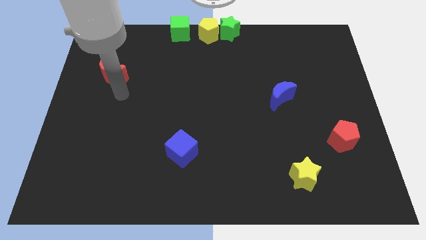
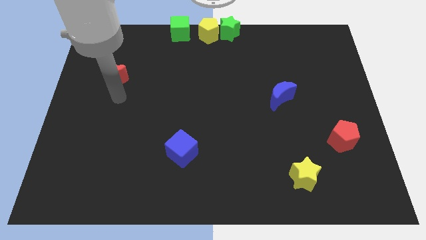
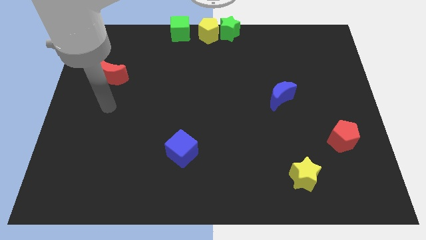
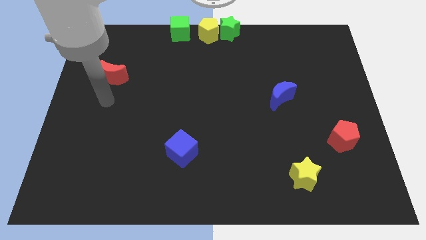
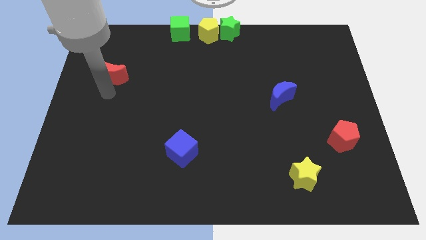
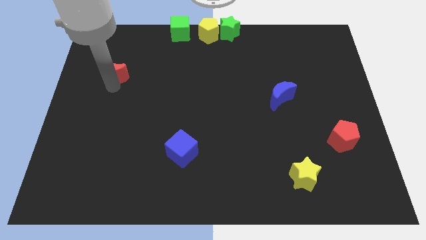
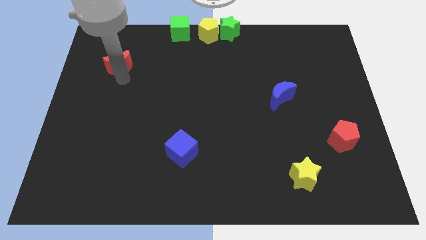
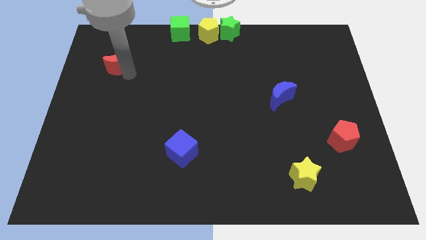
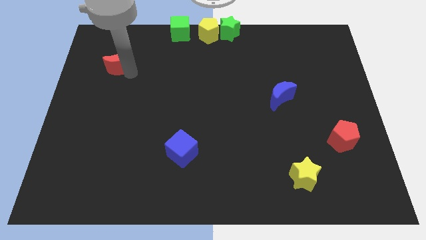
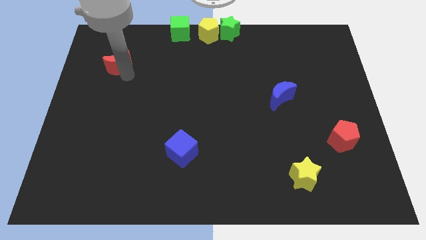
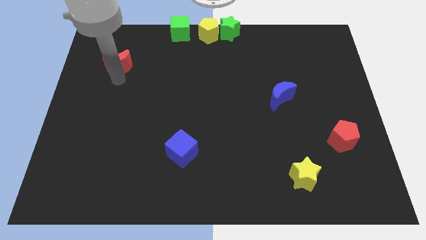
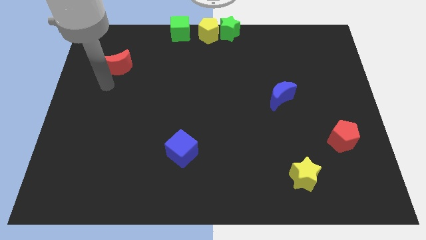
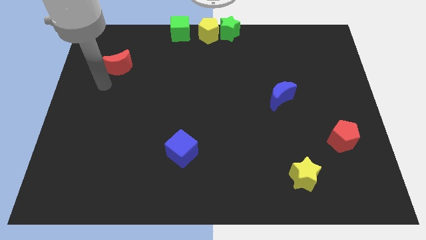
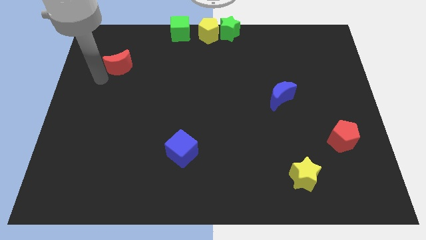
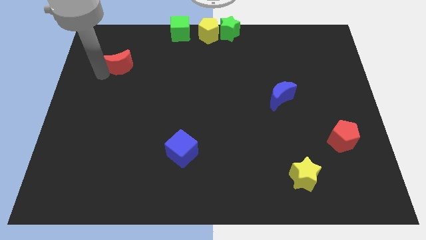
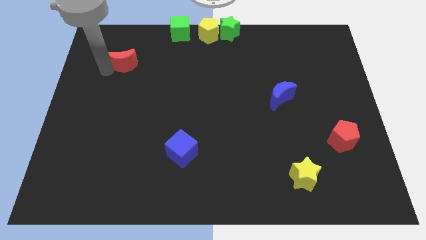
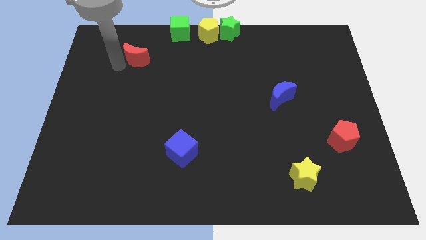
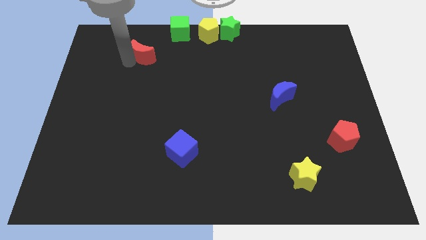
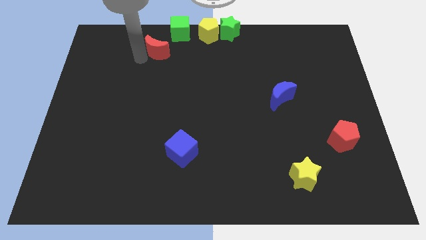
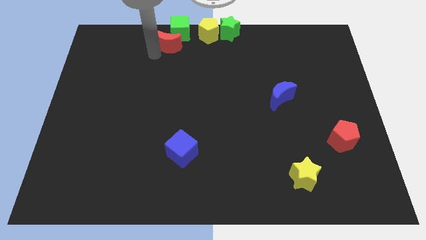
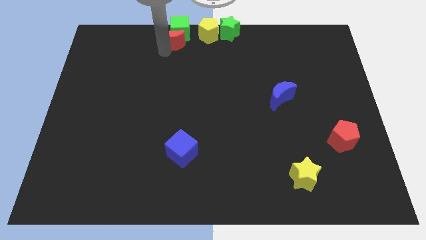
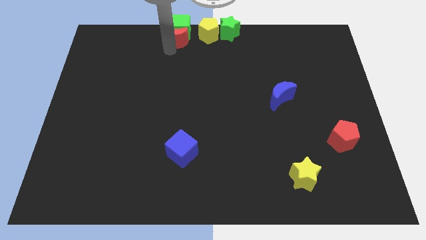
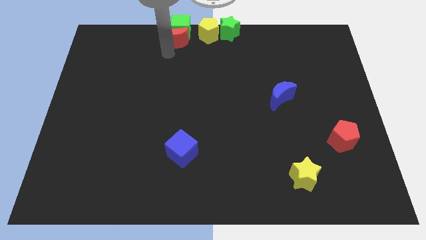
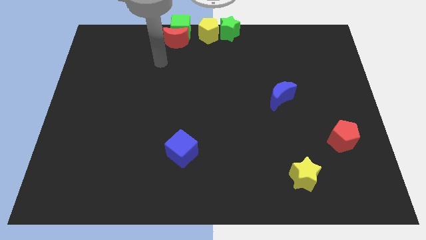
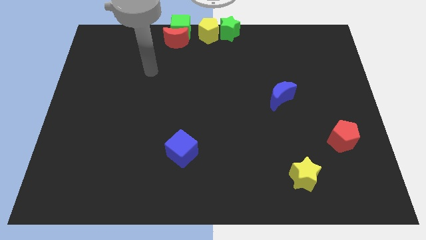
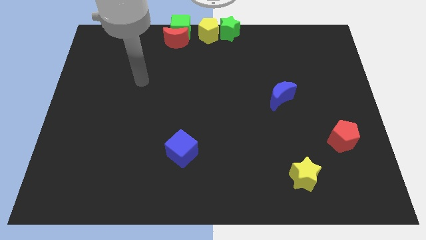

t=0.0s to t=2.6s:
push the red crescent into green cube

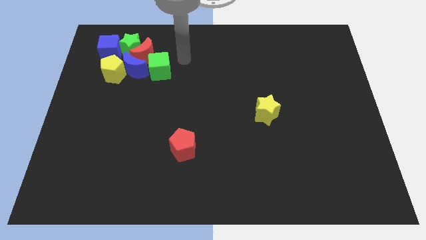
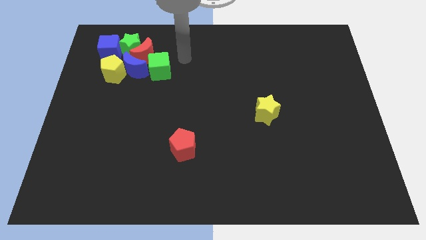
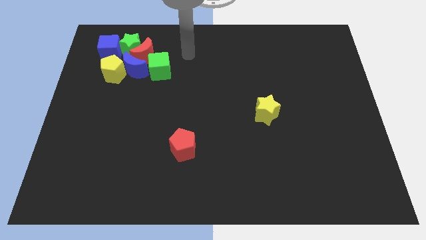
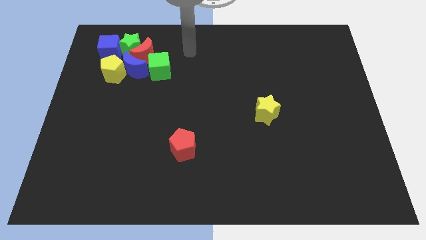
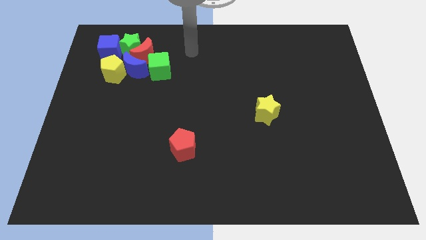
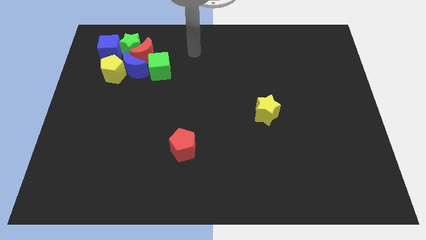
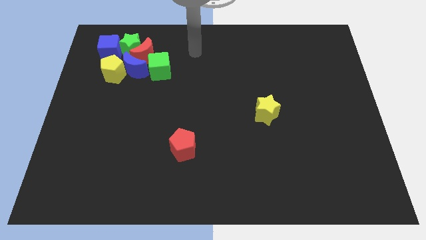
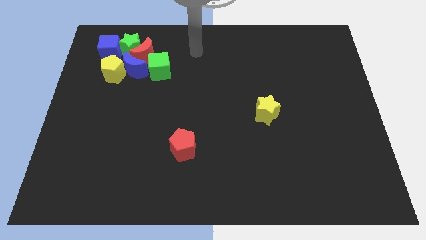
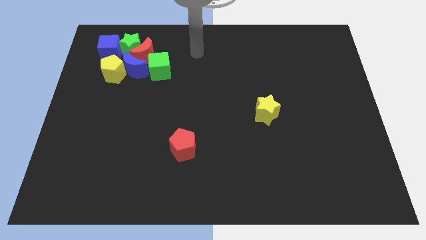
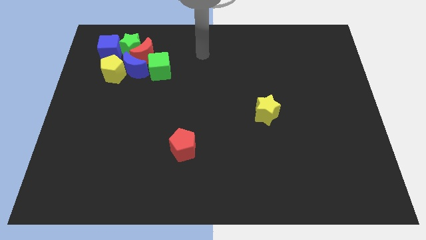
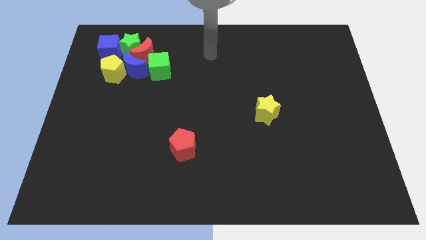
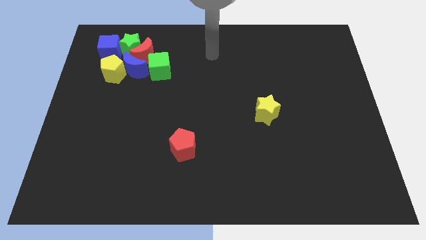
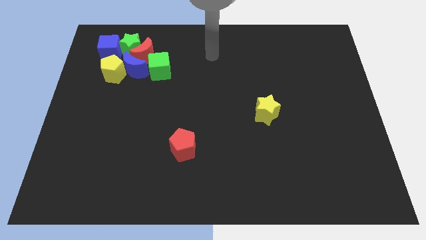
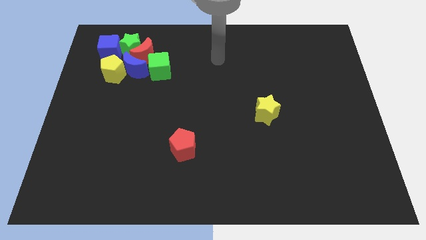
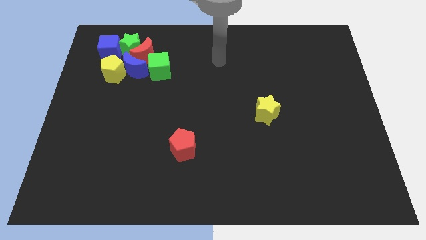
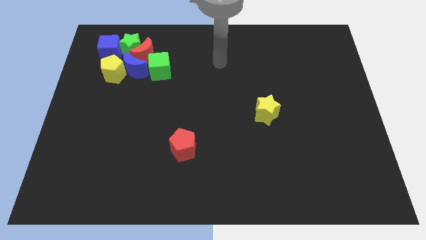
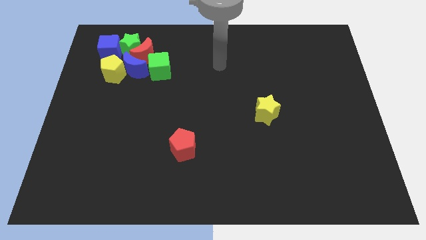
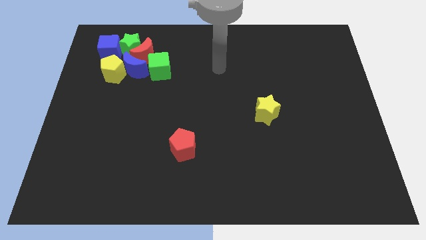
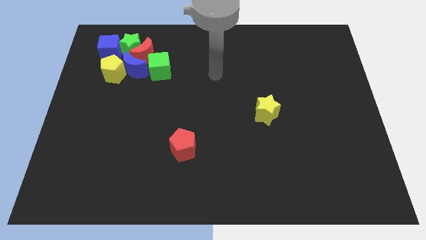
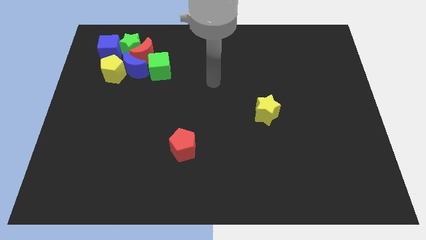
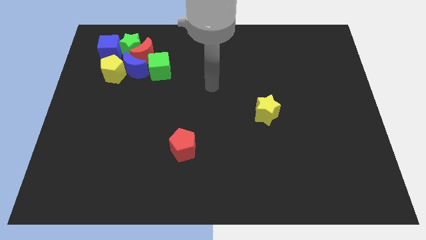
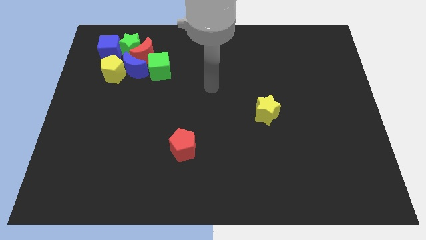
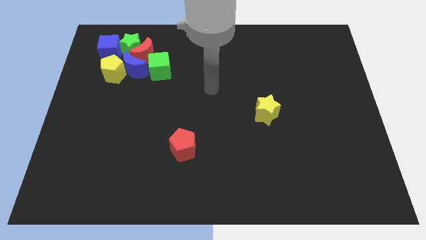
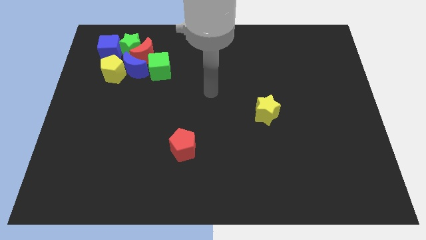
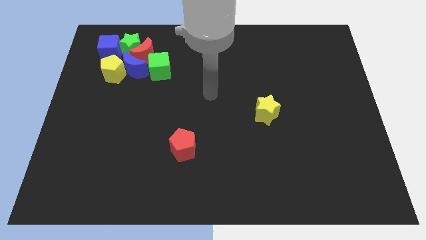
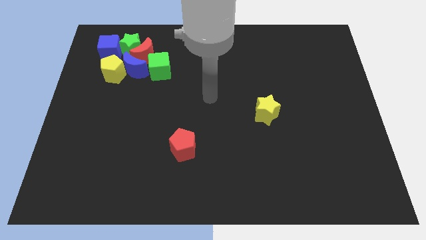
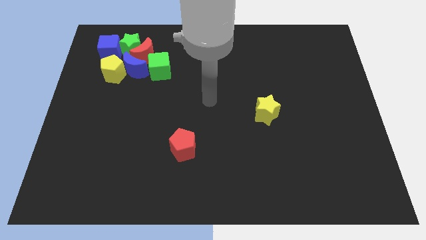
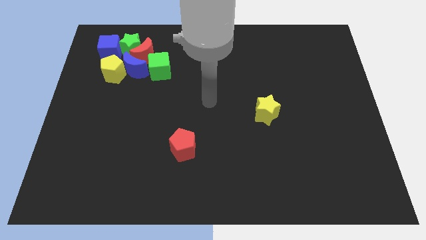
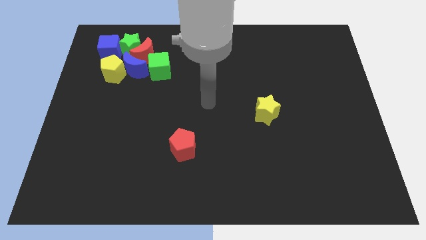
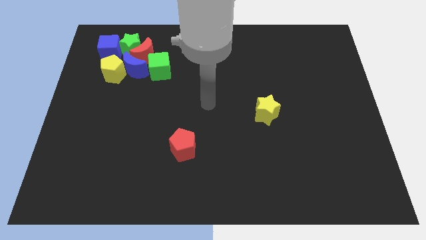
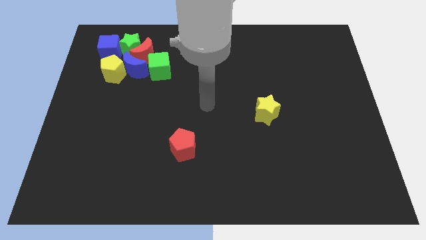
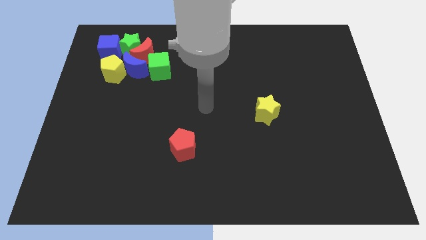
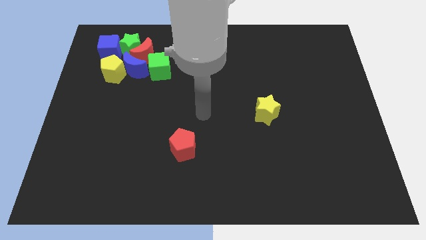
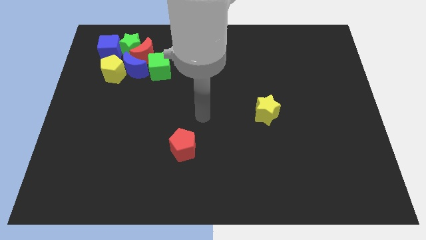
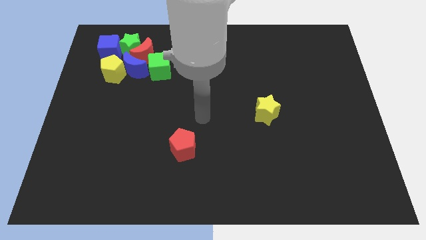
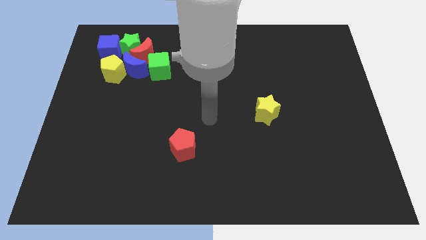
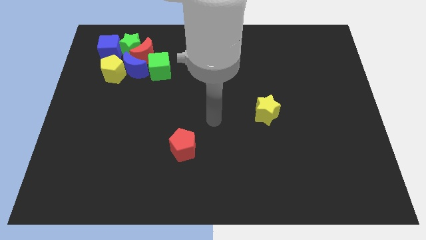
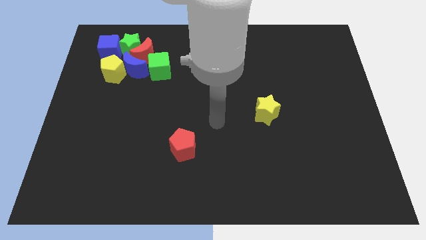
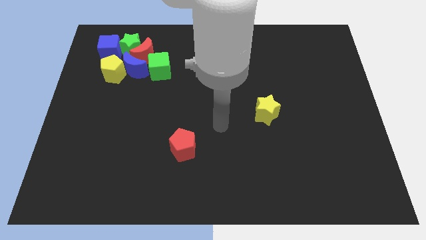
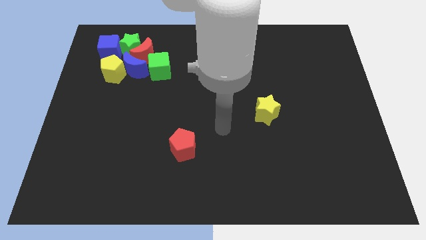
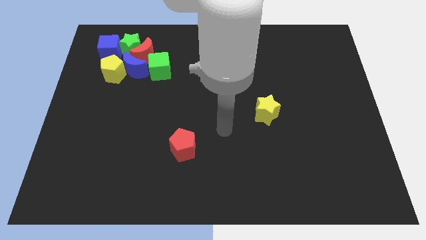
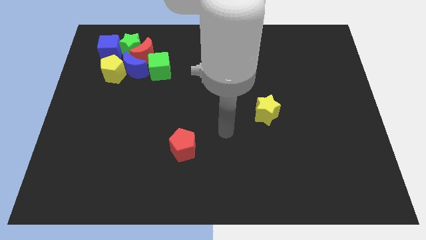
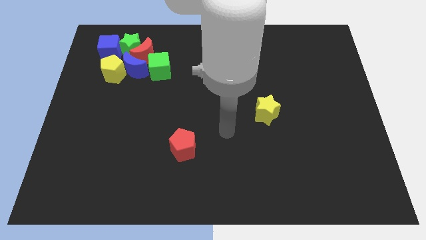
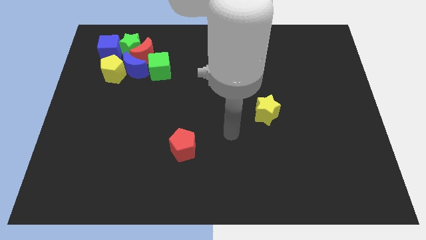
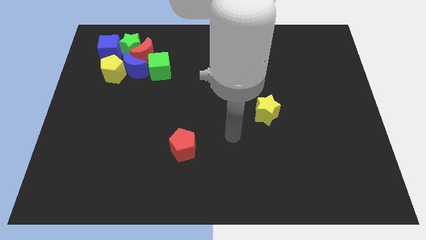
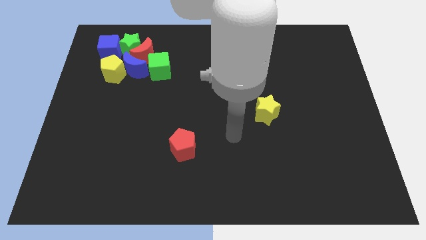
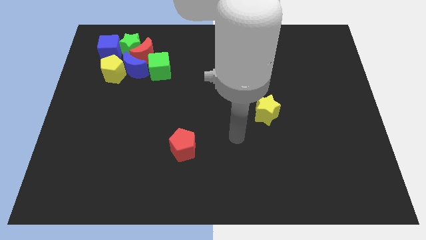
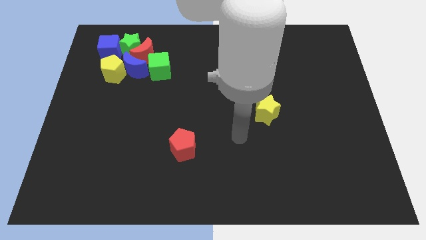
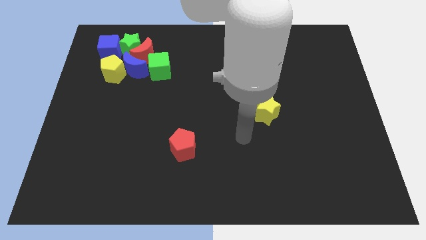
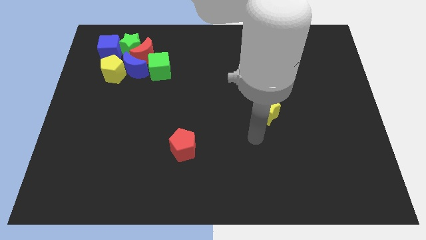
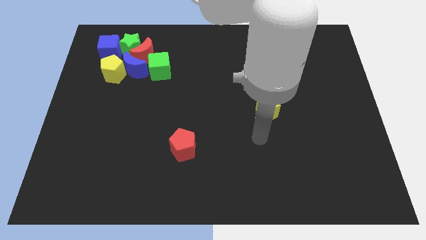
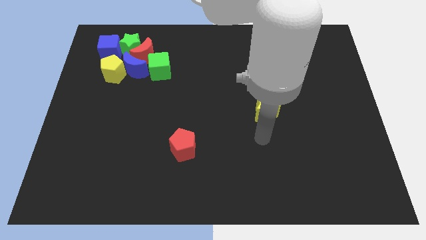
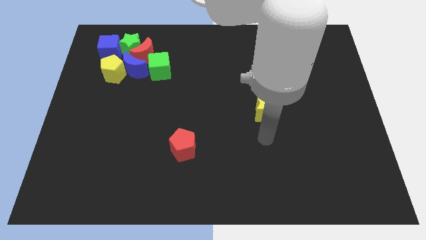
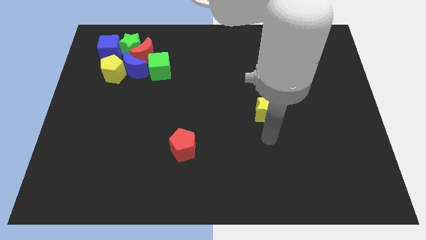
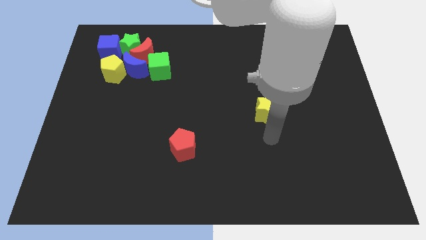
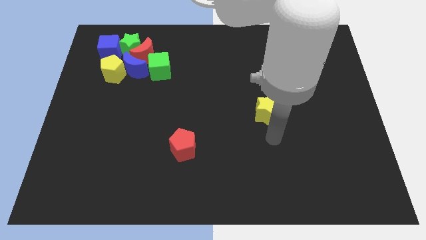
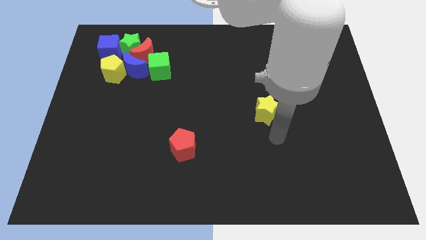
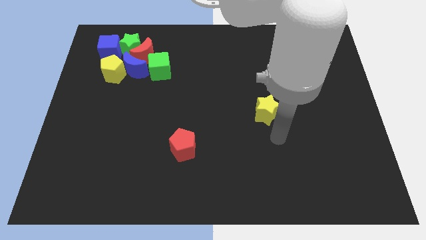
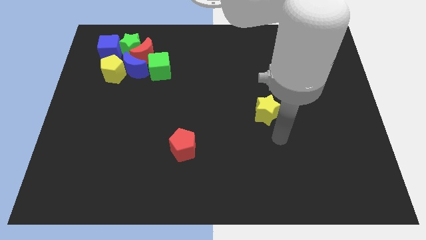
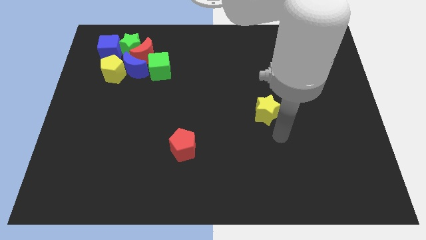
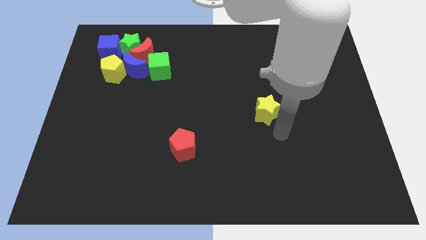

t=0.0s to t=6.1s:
point the arm at the bottom of the yellow star

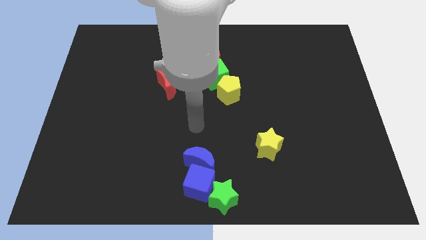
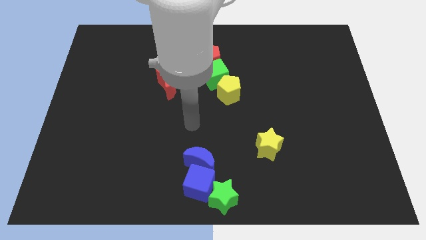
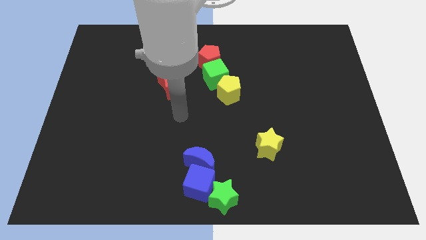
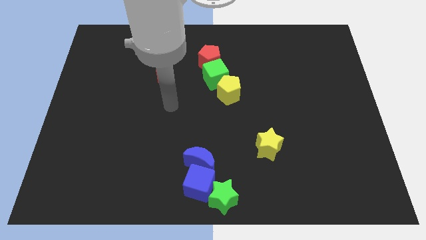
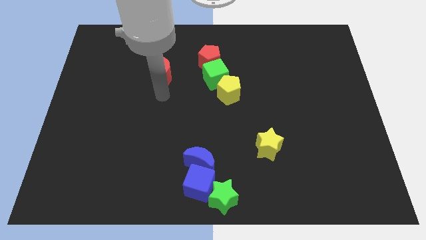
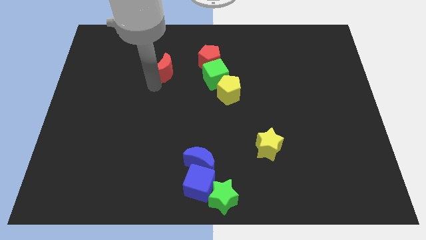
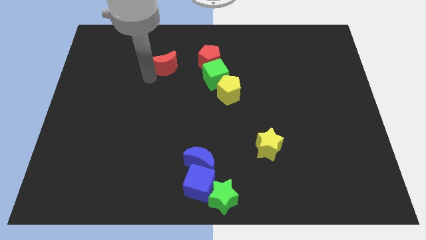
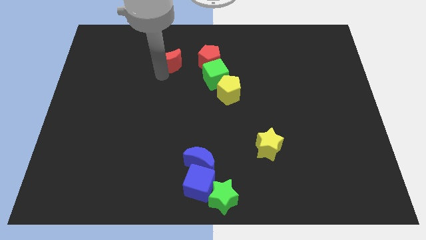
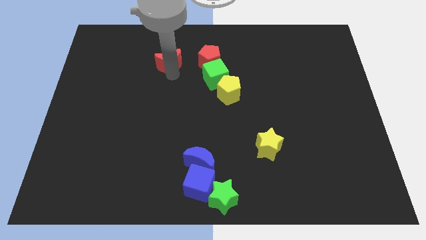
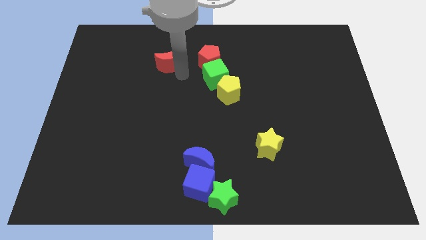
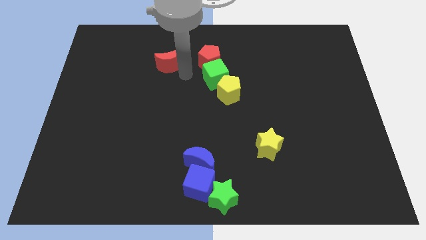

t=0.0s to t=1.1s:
push the red crescent slightly to the top
